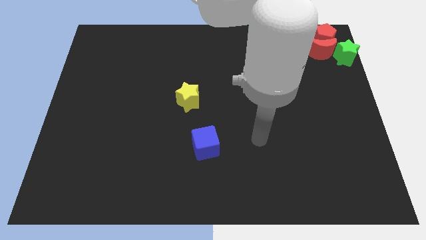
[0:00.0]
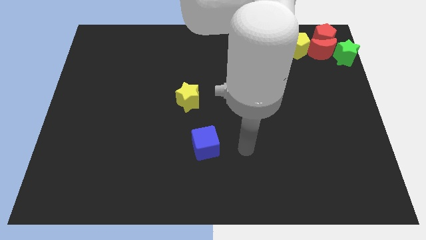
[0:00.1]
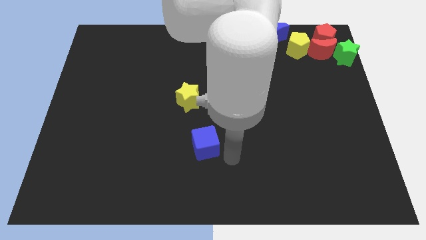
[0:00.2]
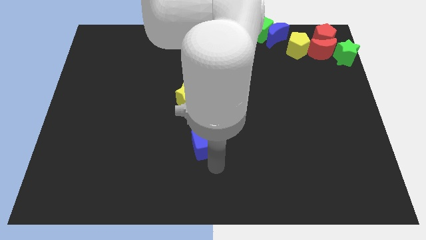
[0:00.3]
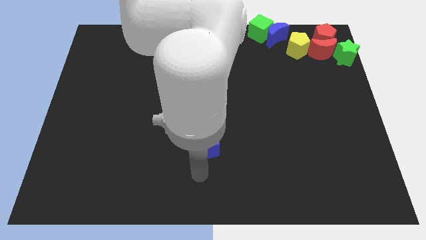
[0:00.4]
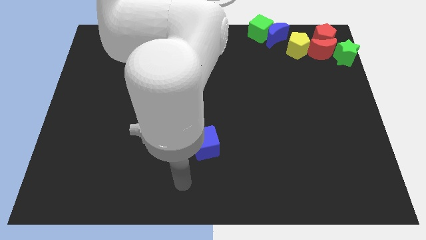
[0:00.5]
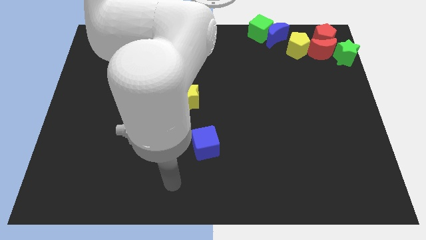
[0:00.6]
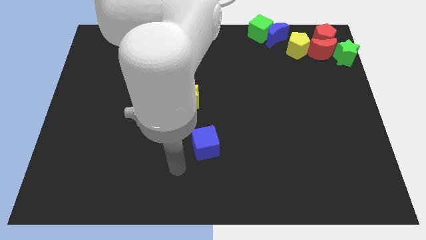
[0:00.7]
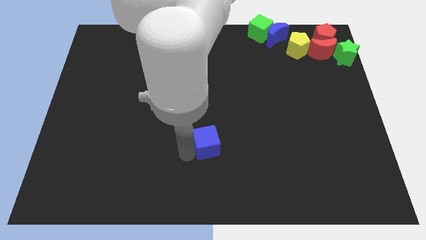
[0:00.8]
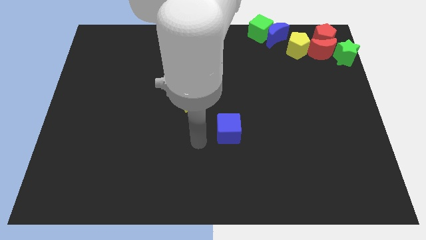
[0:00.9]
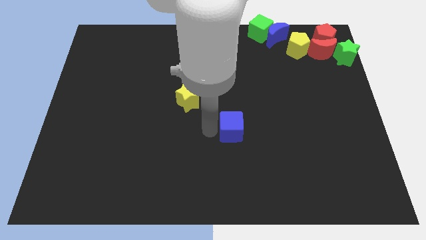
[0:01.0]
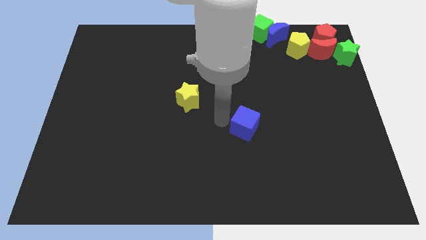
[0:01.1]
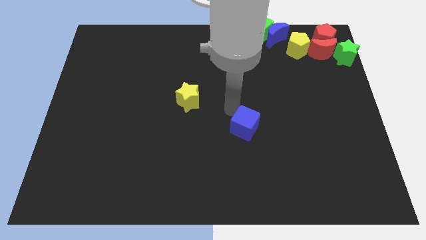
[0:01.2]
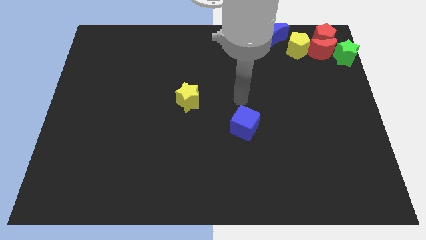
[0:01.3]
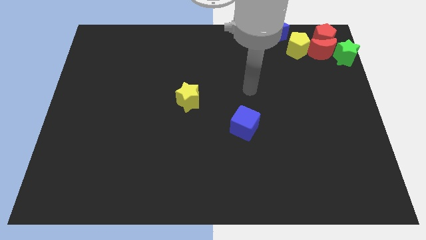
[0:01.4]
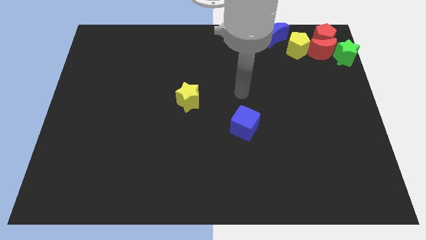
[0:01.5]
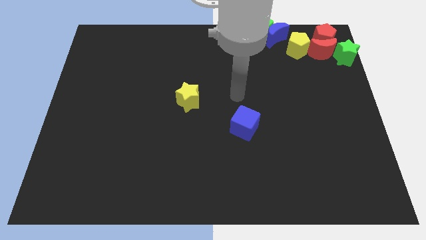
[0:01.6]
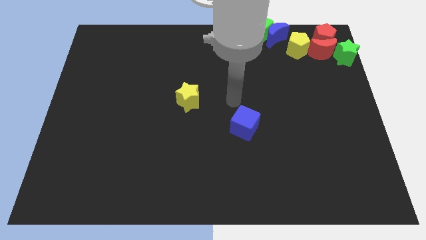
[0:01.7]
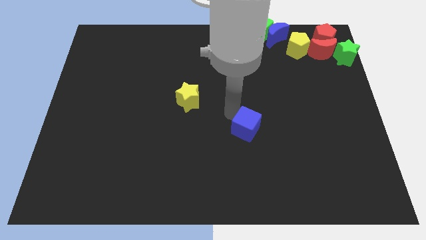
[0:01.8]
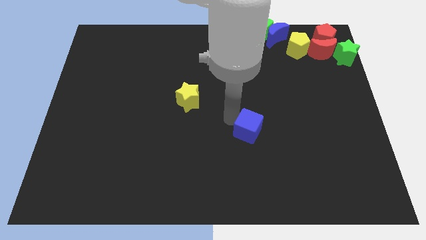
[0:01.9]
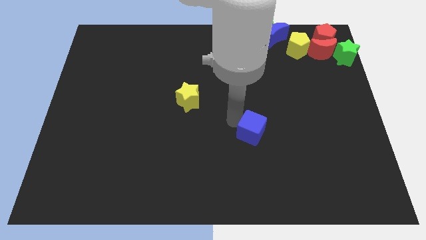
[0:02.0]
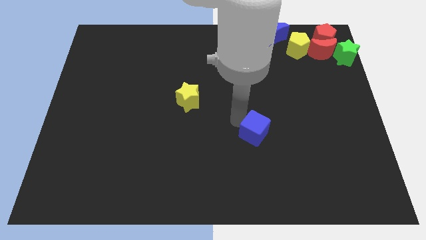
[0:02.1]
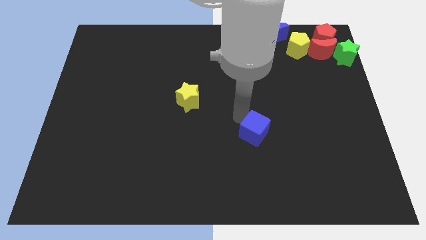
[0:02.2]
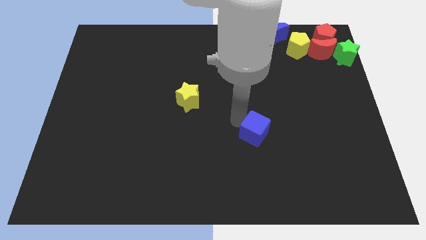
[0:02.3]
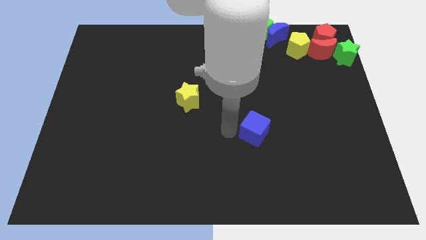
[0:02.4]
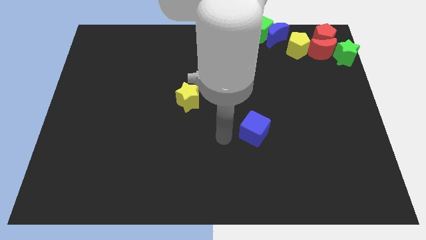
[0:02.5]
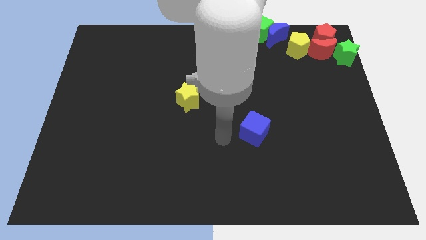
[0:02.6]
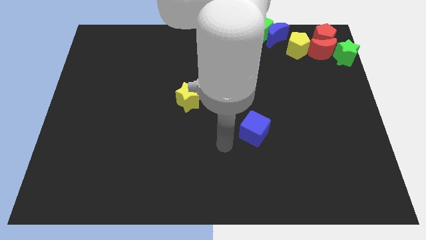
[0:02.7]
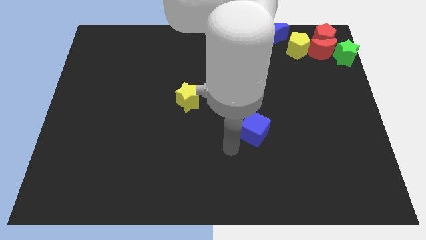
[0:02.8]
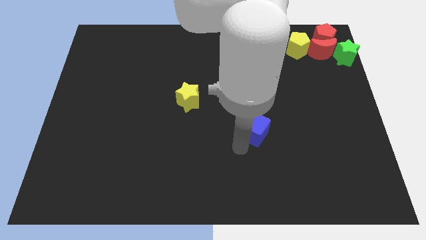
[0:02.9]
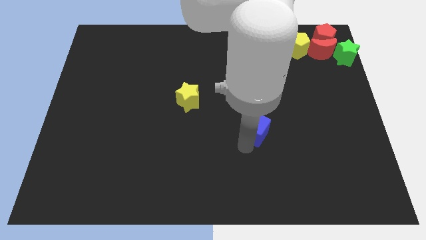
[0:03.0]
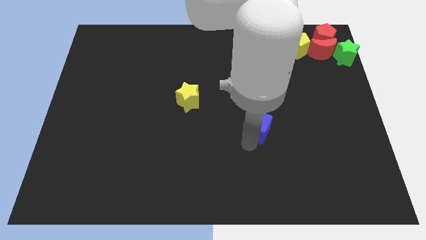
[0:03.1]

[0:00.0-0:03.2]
place the blue cube diagonally to the yellow star

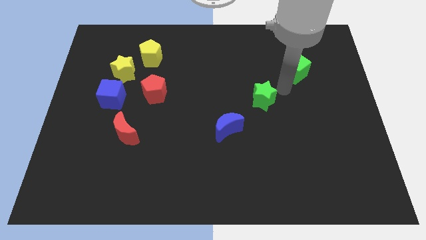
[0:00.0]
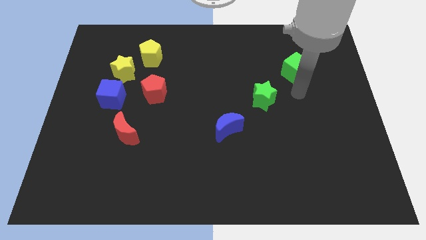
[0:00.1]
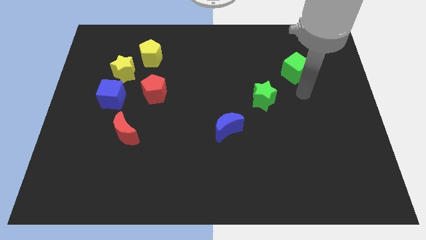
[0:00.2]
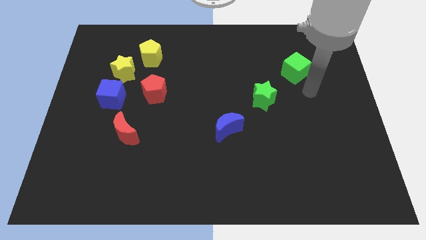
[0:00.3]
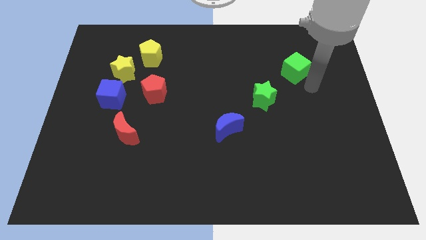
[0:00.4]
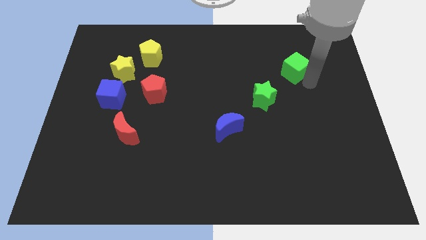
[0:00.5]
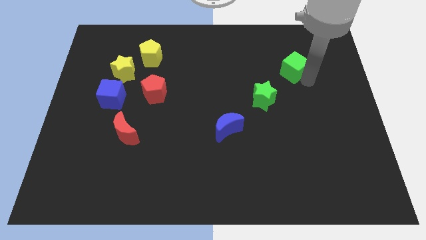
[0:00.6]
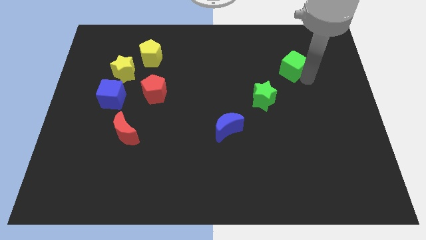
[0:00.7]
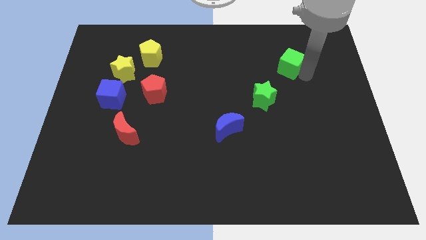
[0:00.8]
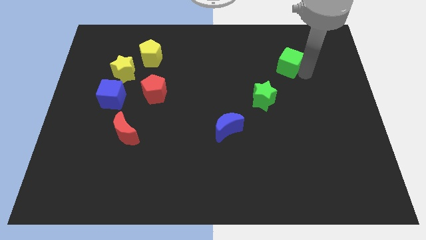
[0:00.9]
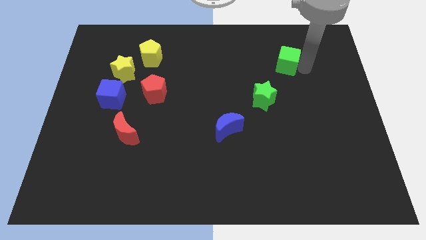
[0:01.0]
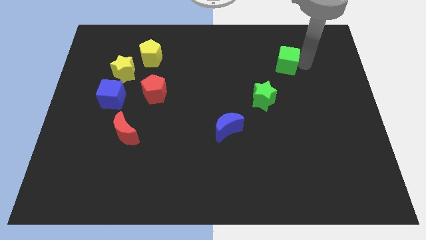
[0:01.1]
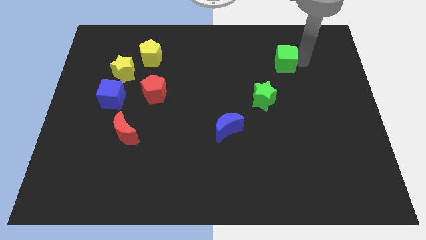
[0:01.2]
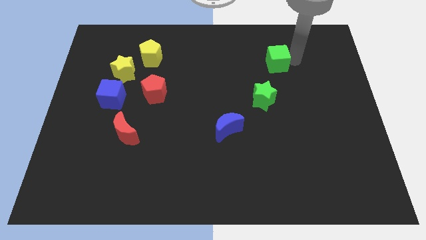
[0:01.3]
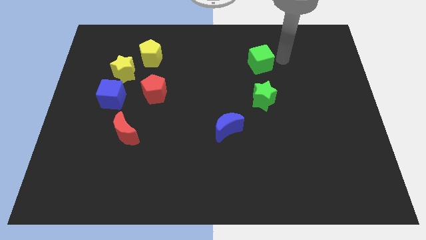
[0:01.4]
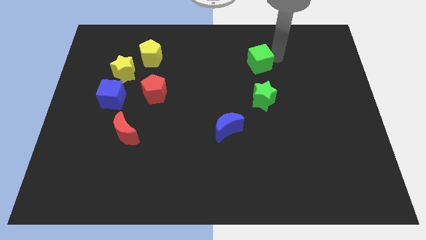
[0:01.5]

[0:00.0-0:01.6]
push the green cube above the green star

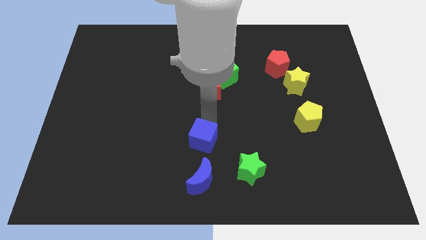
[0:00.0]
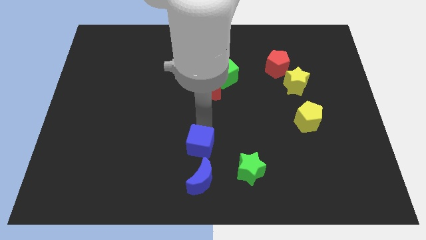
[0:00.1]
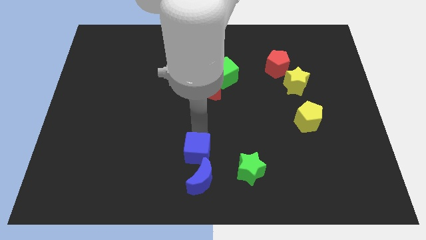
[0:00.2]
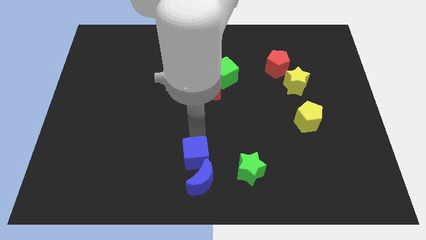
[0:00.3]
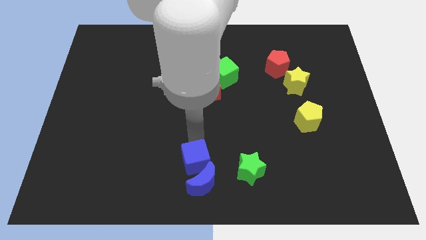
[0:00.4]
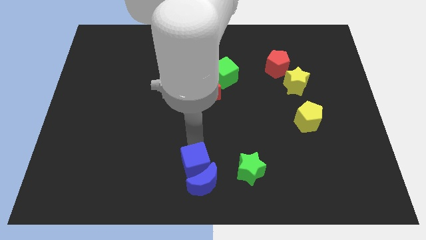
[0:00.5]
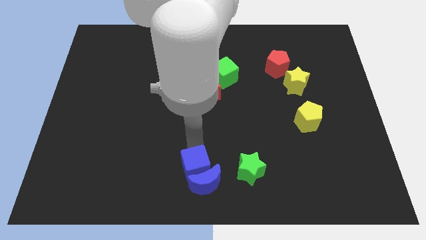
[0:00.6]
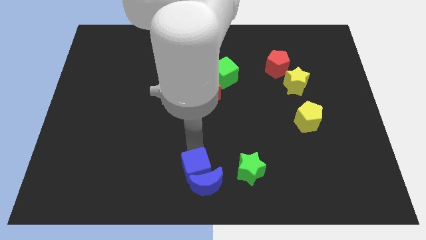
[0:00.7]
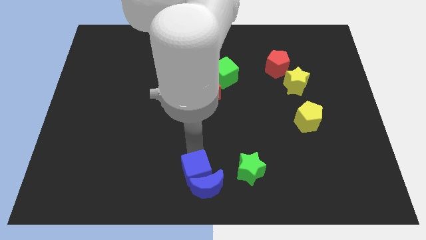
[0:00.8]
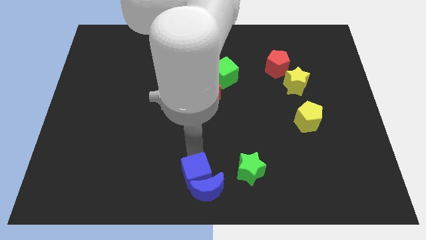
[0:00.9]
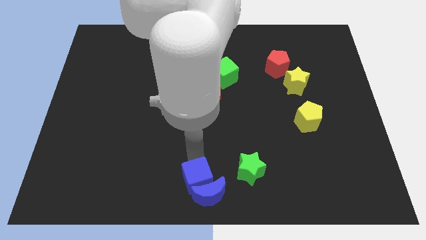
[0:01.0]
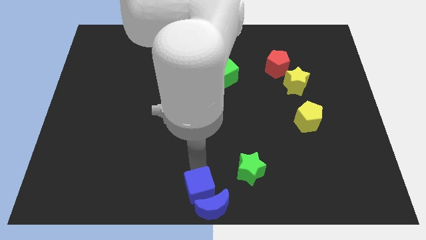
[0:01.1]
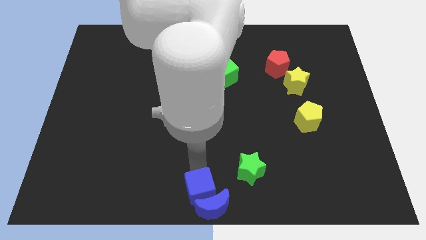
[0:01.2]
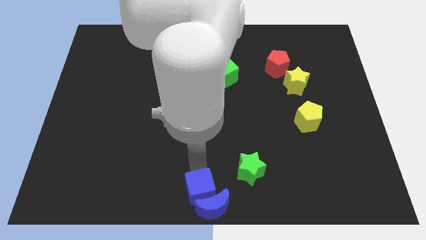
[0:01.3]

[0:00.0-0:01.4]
push the group of blue blocks to the bottom center

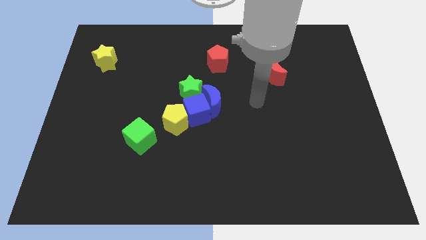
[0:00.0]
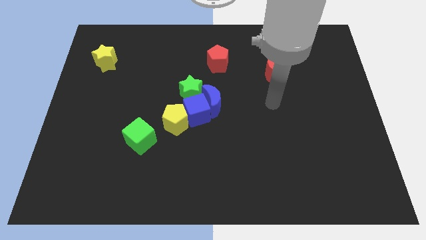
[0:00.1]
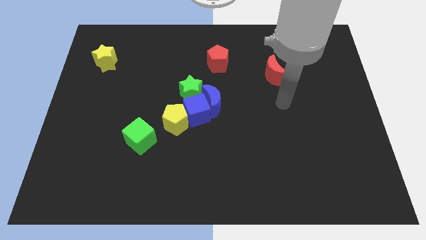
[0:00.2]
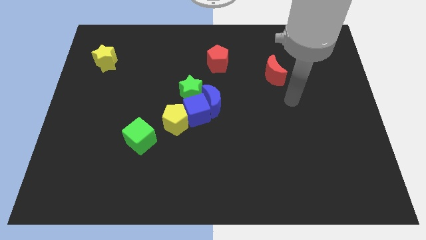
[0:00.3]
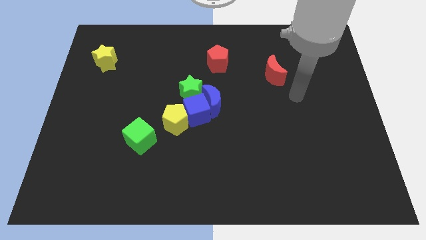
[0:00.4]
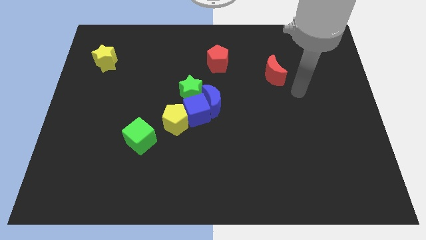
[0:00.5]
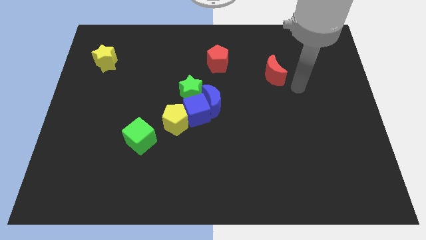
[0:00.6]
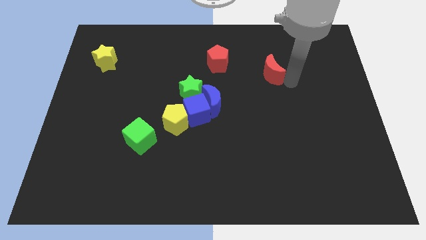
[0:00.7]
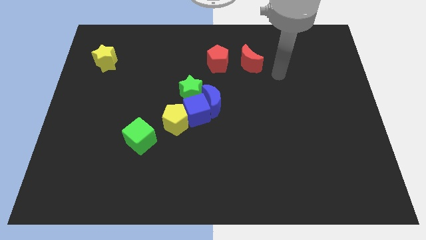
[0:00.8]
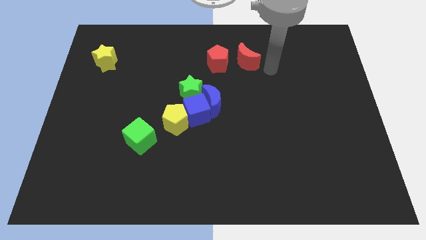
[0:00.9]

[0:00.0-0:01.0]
push red crescent to the left of the red pentagon

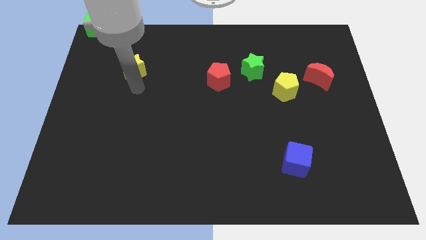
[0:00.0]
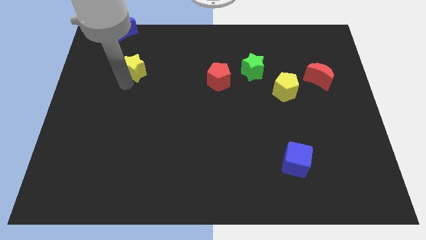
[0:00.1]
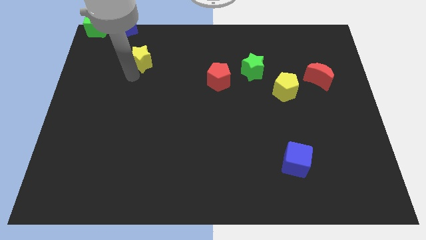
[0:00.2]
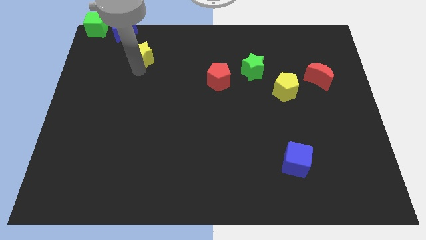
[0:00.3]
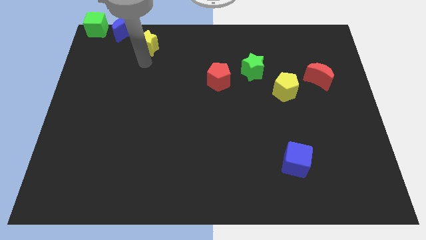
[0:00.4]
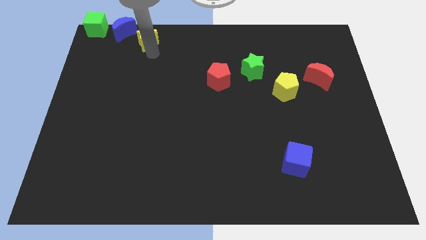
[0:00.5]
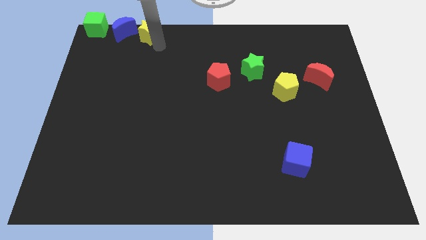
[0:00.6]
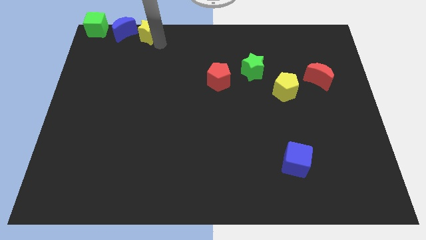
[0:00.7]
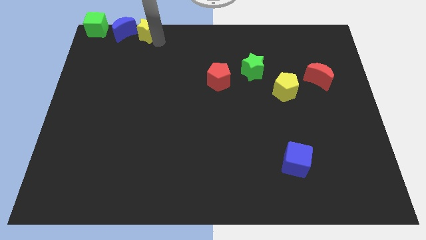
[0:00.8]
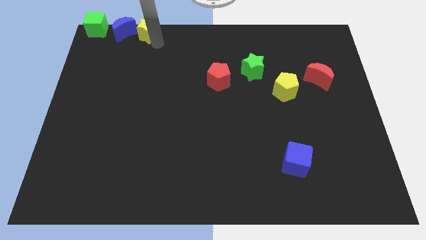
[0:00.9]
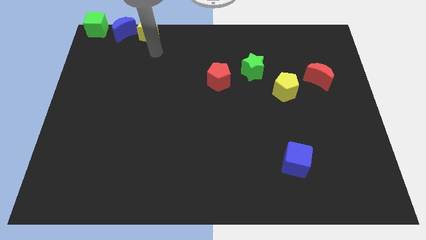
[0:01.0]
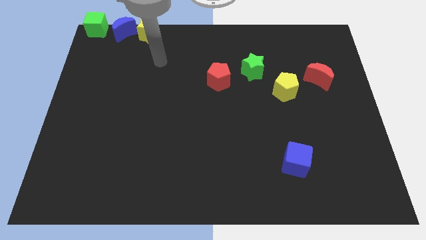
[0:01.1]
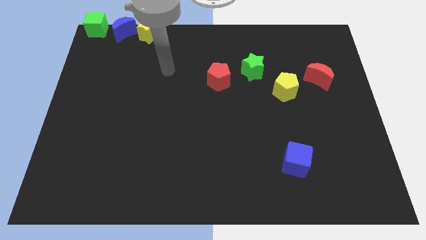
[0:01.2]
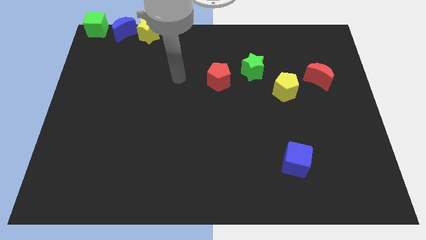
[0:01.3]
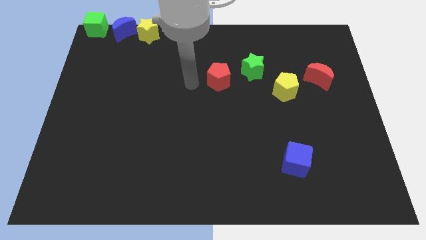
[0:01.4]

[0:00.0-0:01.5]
slide the yellow star diagonally top left to the red pentagon
